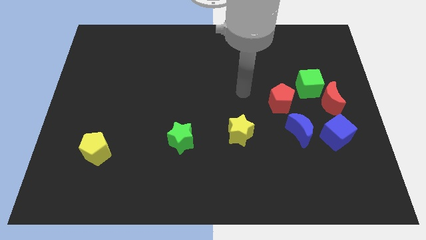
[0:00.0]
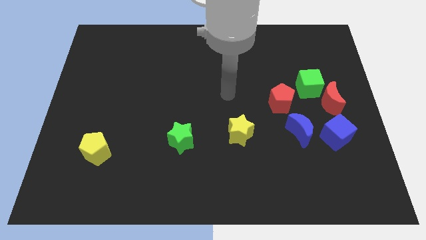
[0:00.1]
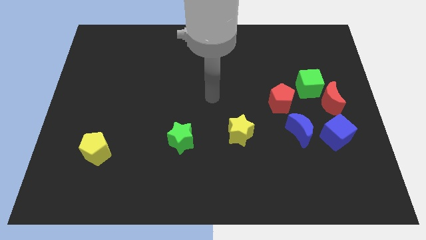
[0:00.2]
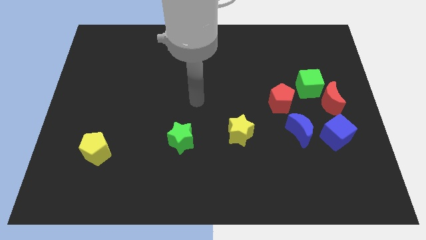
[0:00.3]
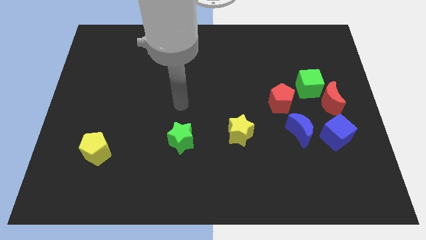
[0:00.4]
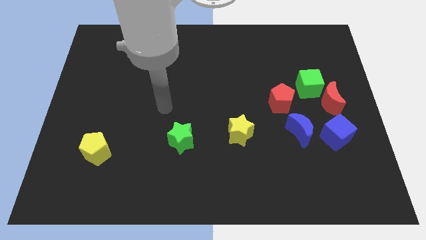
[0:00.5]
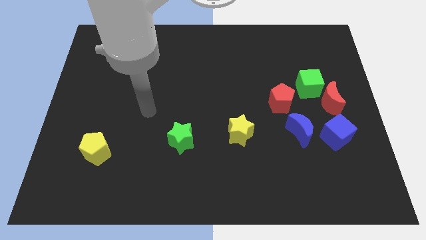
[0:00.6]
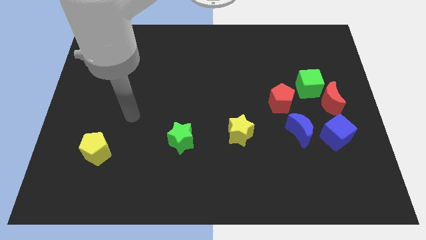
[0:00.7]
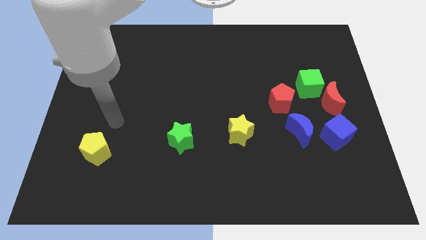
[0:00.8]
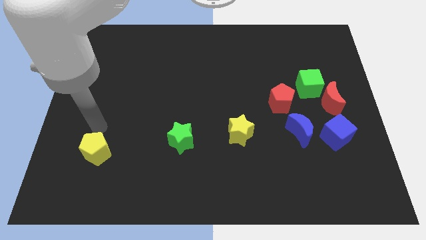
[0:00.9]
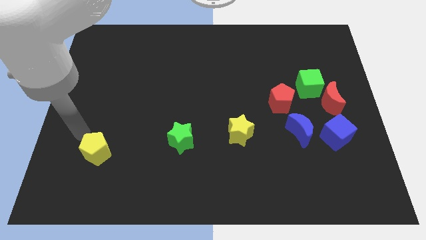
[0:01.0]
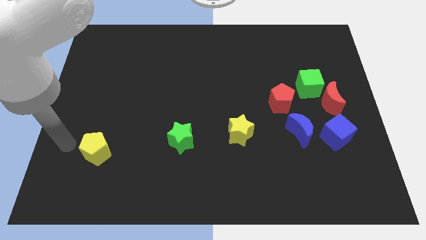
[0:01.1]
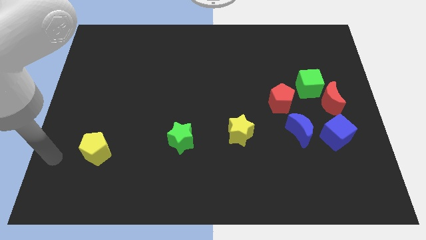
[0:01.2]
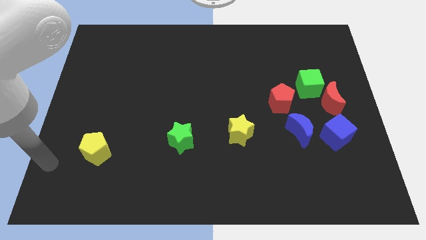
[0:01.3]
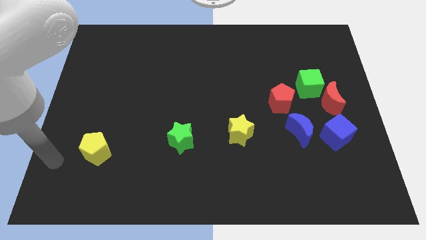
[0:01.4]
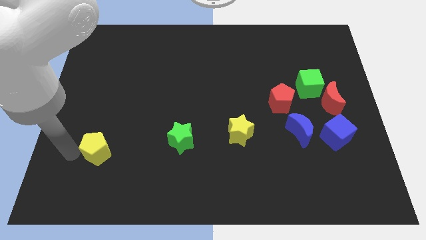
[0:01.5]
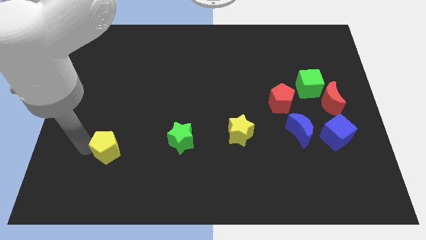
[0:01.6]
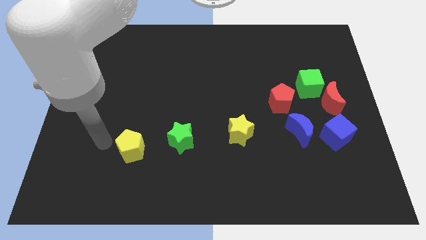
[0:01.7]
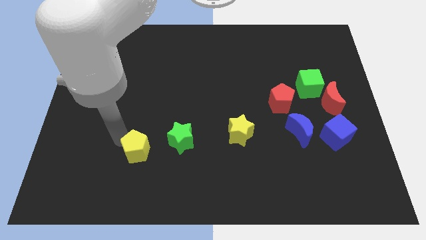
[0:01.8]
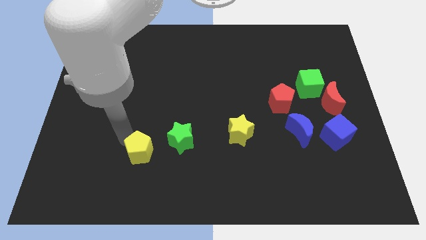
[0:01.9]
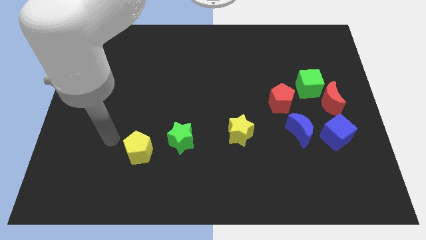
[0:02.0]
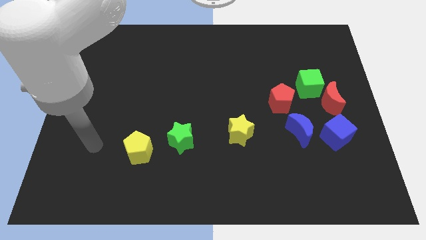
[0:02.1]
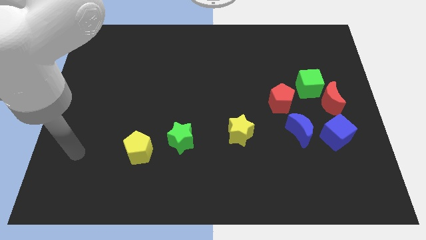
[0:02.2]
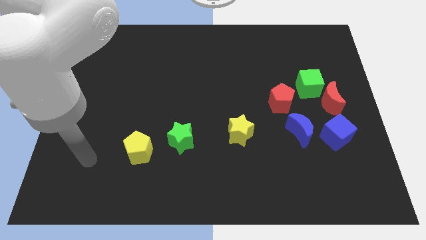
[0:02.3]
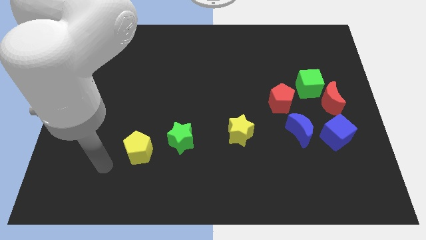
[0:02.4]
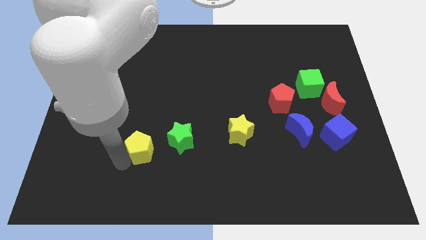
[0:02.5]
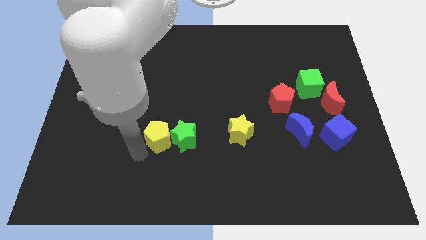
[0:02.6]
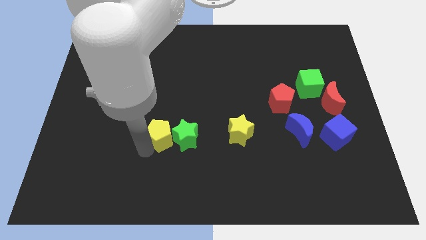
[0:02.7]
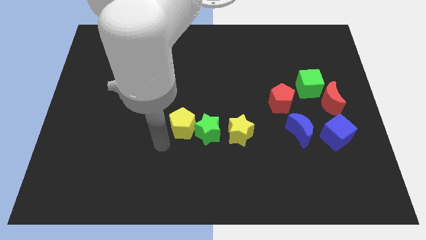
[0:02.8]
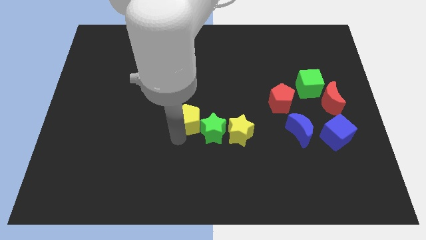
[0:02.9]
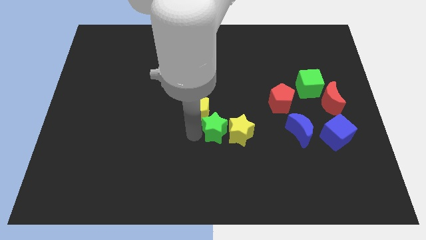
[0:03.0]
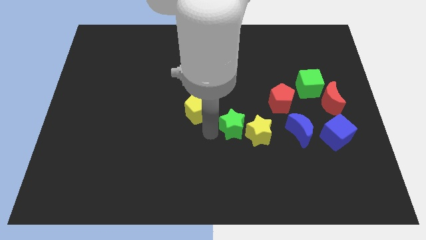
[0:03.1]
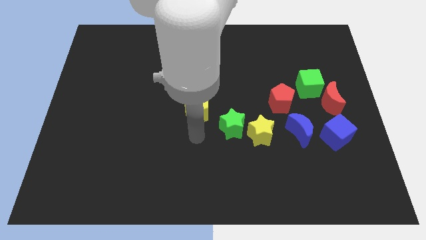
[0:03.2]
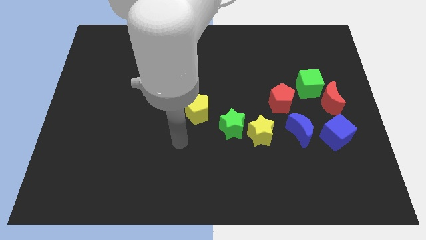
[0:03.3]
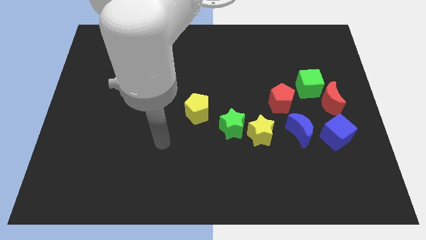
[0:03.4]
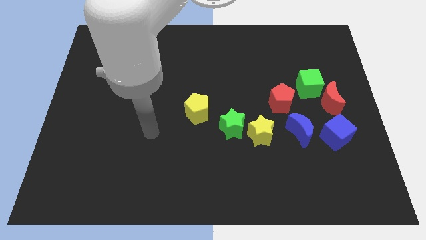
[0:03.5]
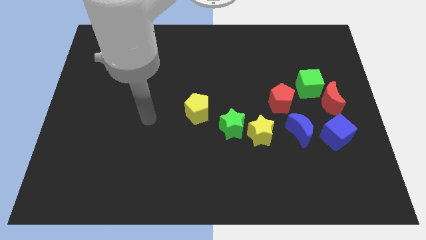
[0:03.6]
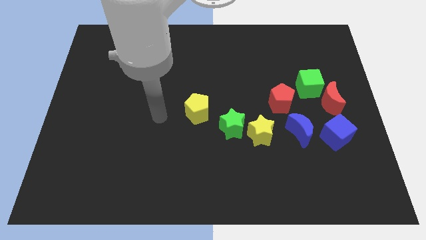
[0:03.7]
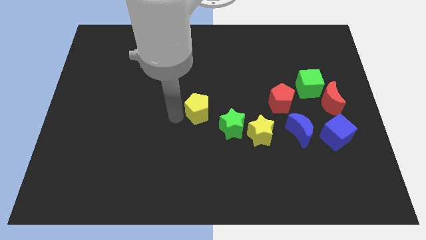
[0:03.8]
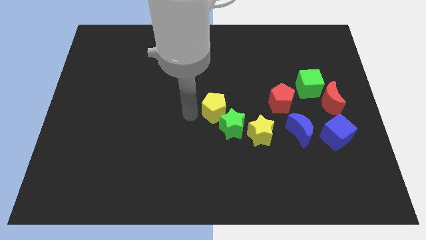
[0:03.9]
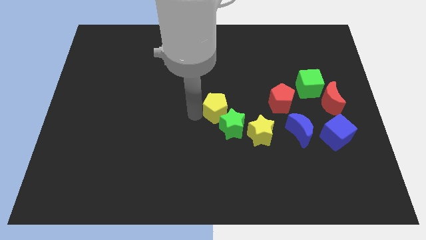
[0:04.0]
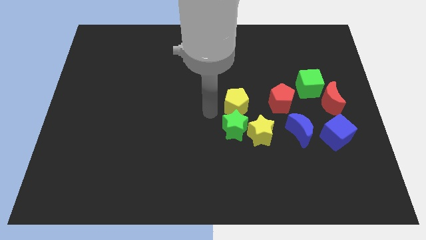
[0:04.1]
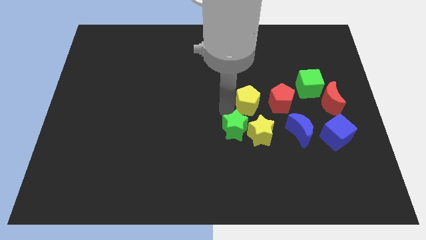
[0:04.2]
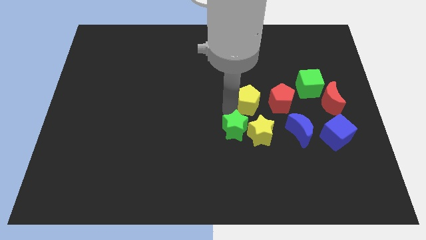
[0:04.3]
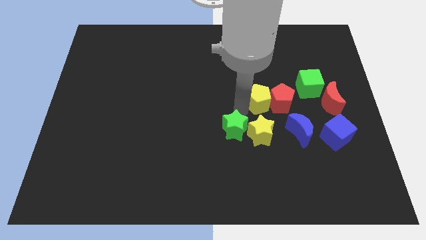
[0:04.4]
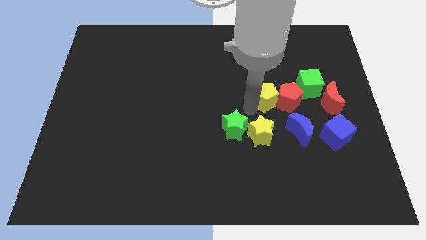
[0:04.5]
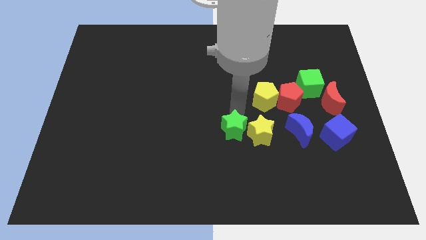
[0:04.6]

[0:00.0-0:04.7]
push the yellow pentagon into the red pentagon

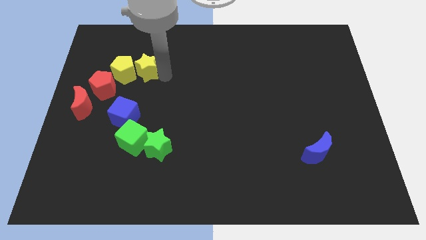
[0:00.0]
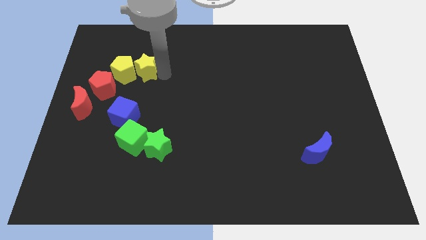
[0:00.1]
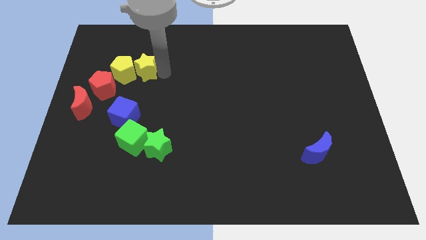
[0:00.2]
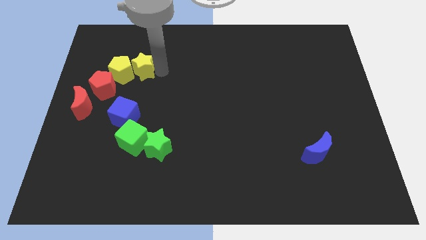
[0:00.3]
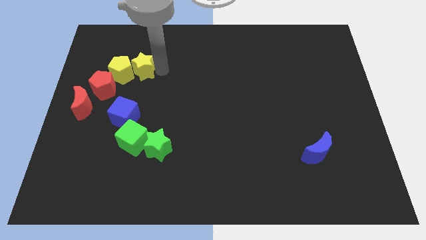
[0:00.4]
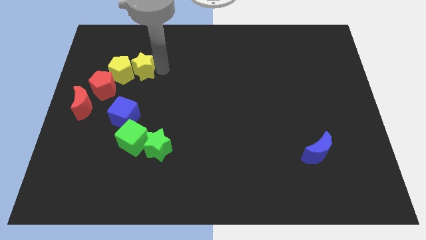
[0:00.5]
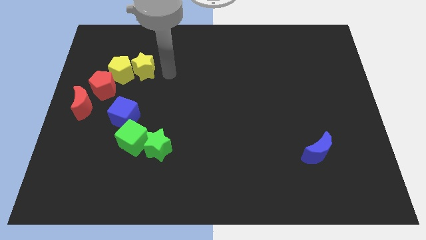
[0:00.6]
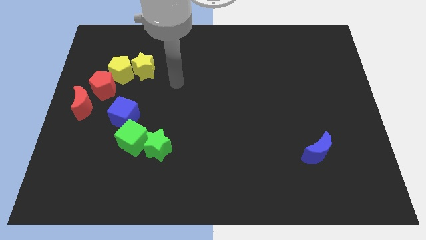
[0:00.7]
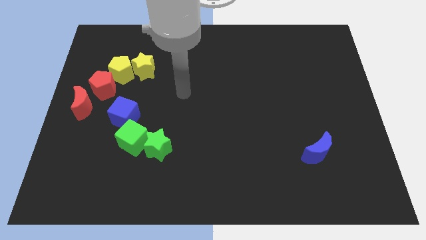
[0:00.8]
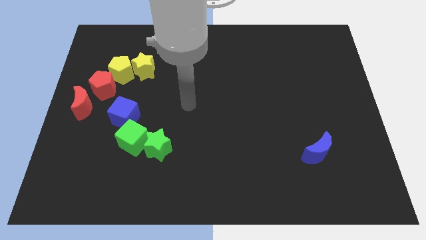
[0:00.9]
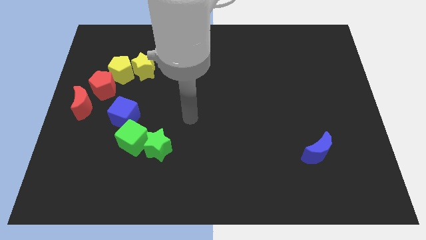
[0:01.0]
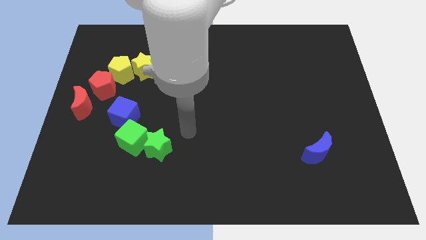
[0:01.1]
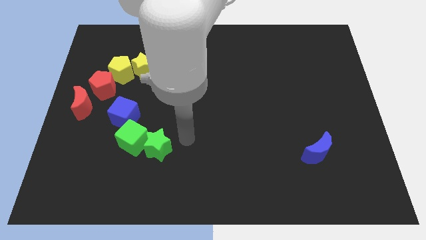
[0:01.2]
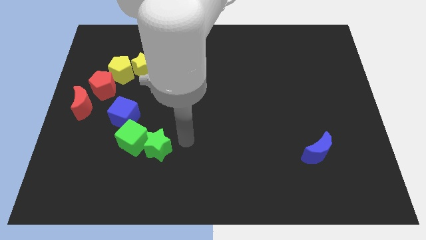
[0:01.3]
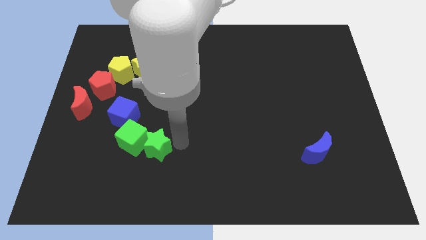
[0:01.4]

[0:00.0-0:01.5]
move away from the yellow star

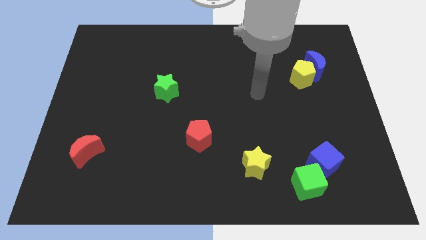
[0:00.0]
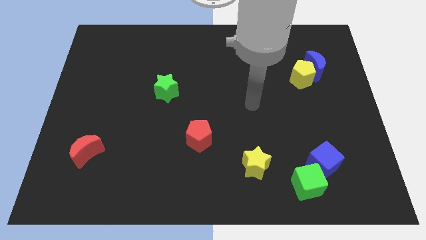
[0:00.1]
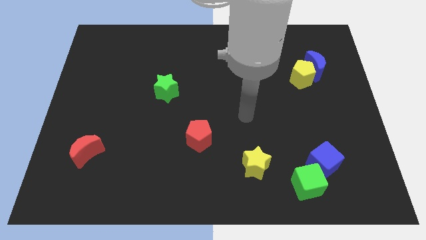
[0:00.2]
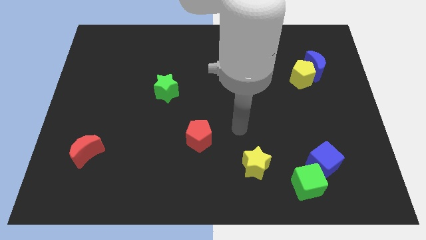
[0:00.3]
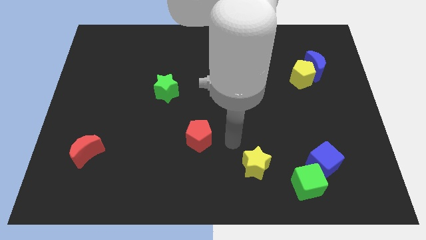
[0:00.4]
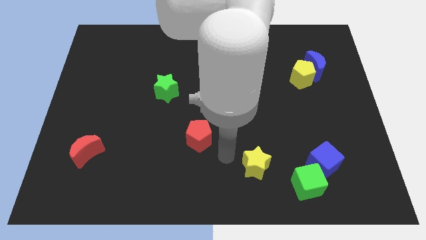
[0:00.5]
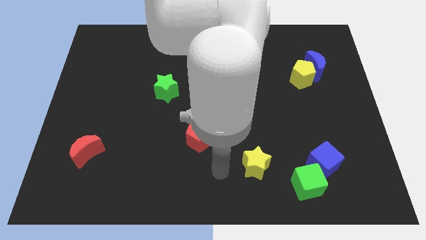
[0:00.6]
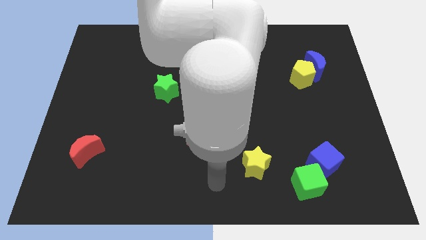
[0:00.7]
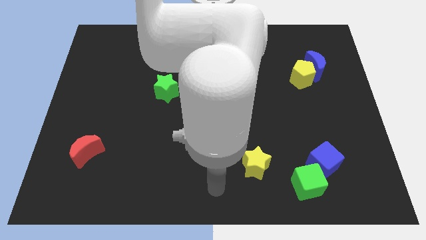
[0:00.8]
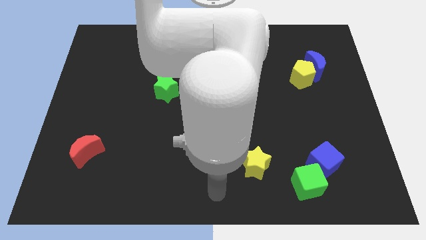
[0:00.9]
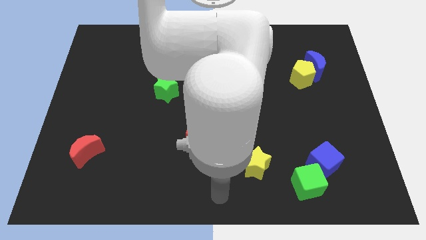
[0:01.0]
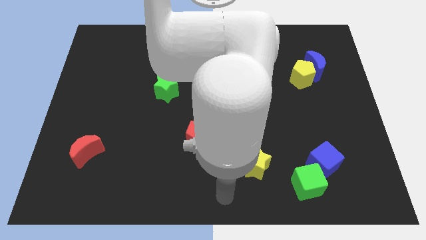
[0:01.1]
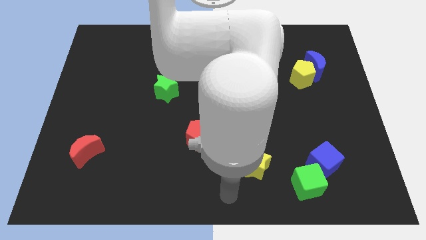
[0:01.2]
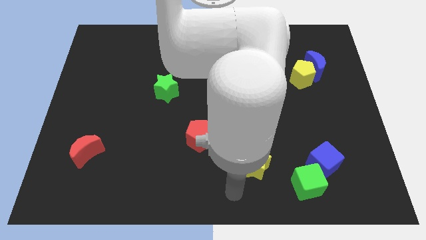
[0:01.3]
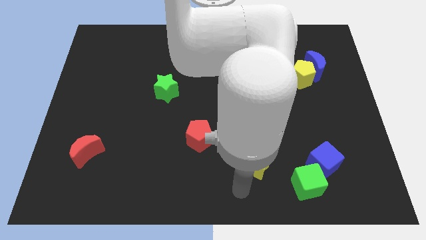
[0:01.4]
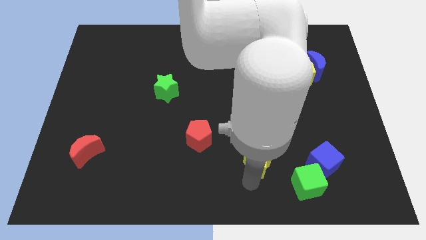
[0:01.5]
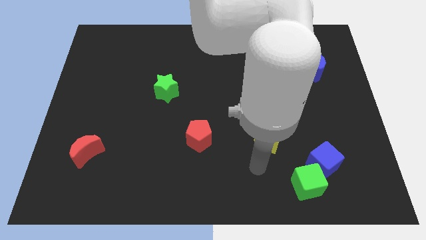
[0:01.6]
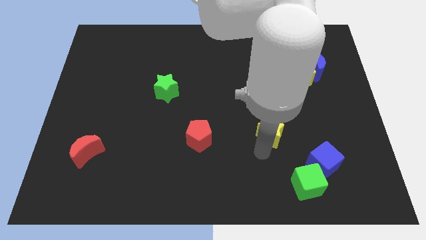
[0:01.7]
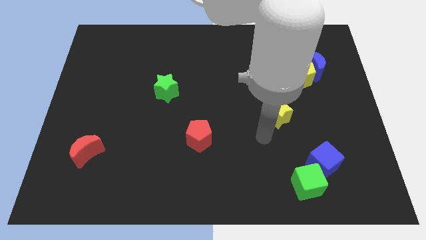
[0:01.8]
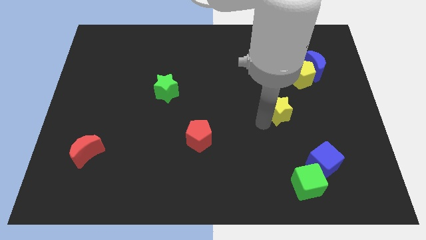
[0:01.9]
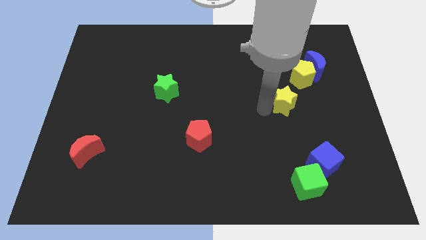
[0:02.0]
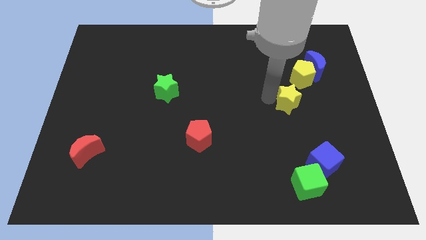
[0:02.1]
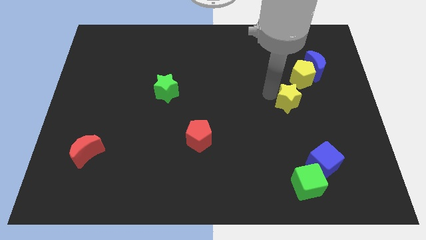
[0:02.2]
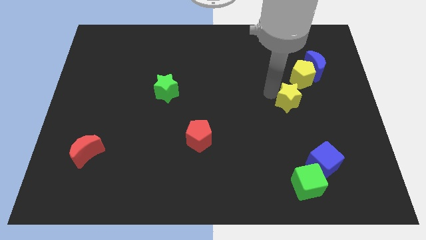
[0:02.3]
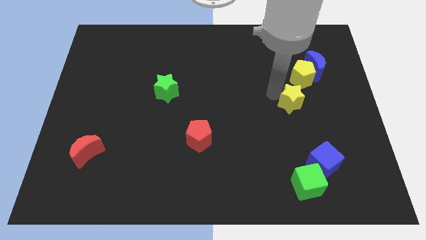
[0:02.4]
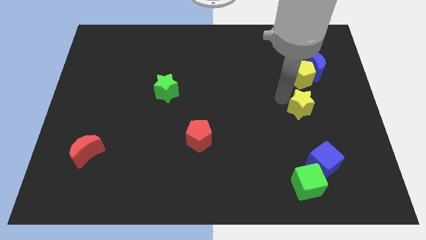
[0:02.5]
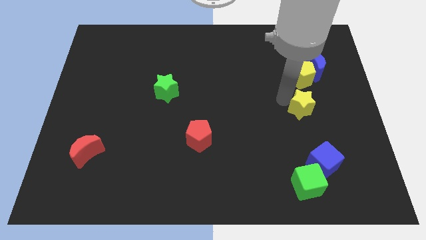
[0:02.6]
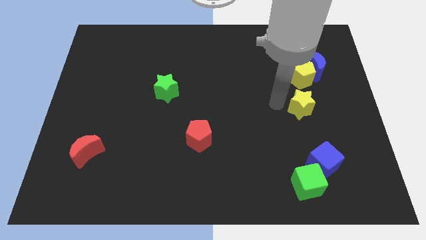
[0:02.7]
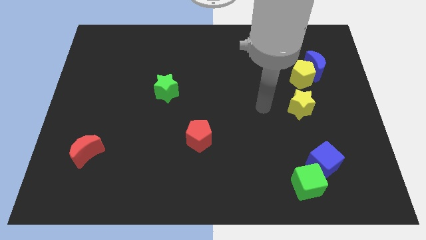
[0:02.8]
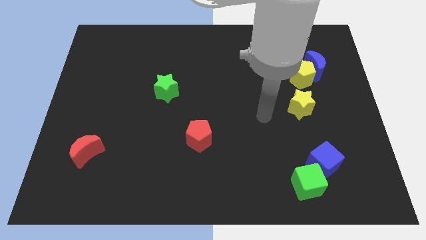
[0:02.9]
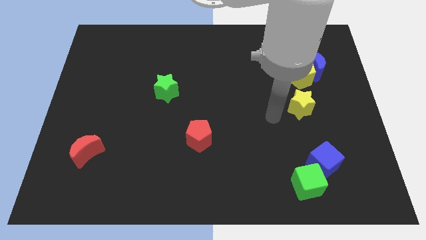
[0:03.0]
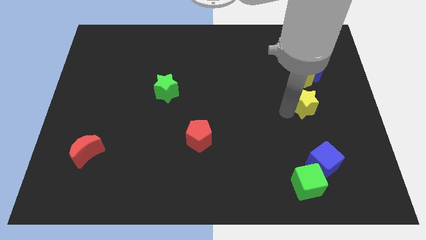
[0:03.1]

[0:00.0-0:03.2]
place the yellow star below the yellow pentagon
